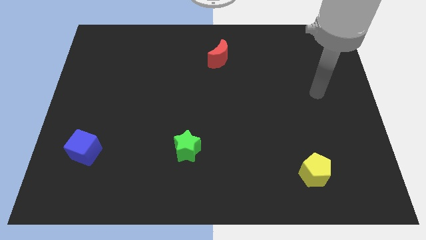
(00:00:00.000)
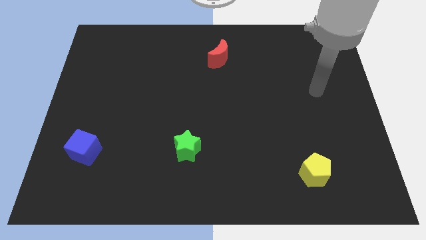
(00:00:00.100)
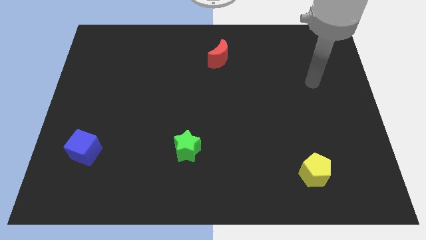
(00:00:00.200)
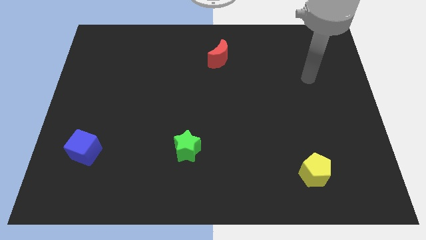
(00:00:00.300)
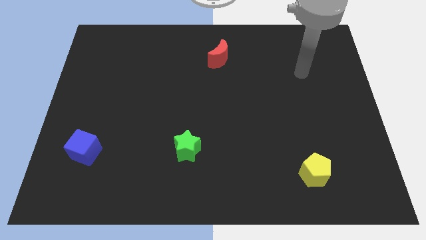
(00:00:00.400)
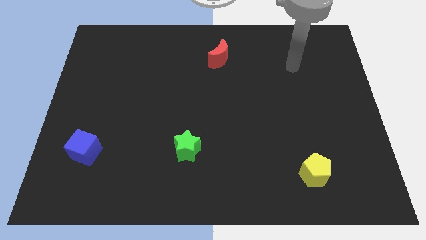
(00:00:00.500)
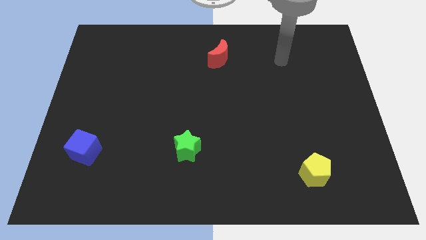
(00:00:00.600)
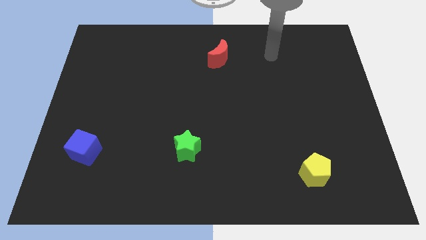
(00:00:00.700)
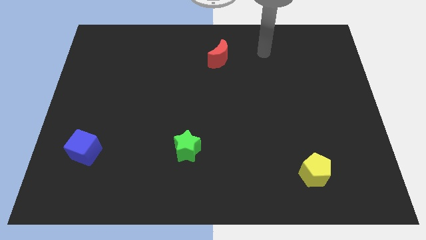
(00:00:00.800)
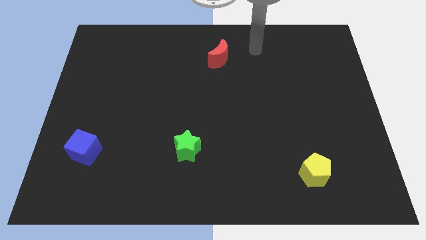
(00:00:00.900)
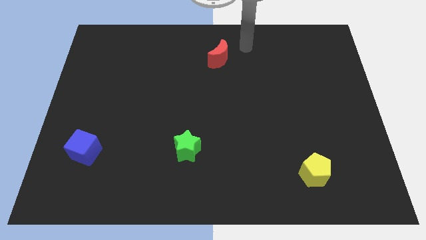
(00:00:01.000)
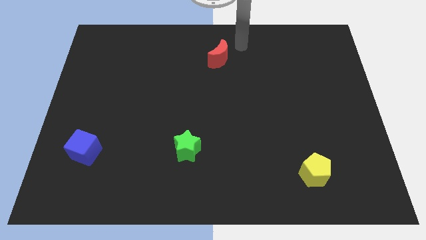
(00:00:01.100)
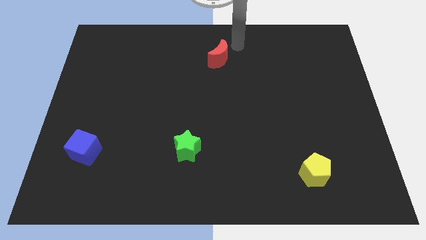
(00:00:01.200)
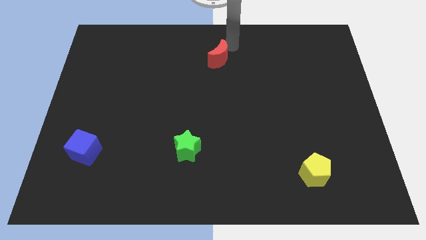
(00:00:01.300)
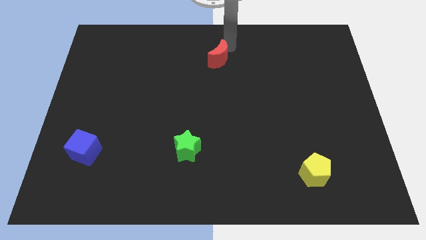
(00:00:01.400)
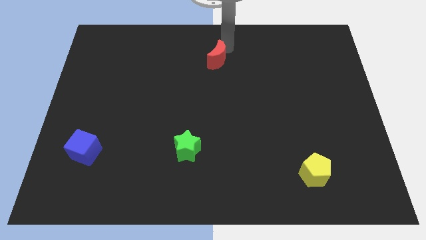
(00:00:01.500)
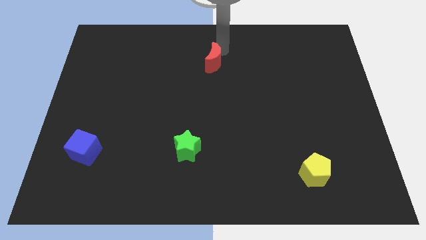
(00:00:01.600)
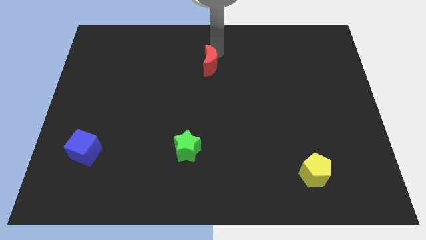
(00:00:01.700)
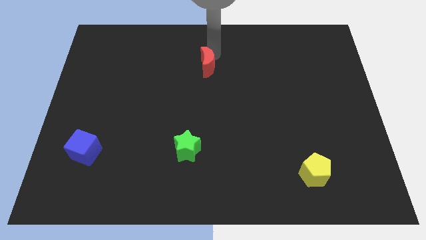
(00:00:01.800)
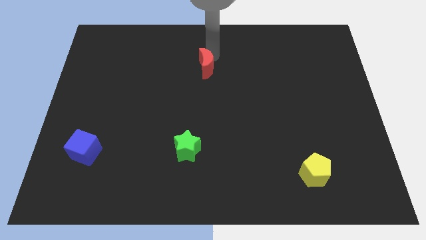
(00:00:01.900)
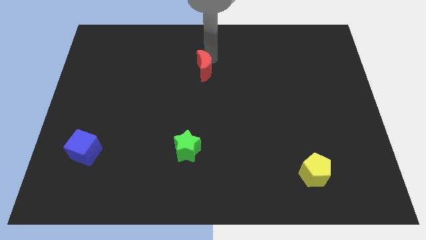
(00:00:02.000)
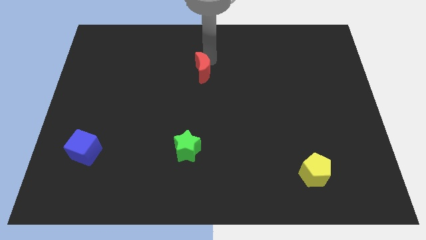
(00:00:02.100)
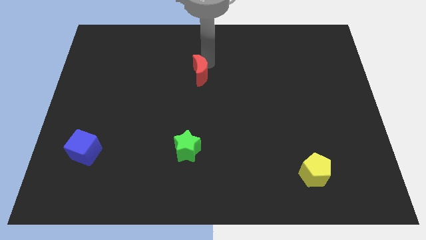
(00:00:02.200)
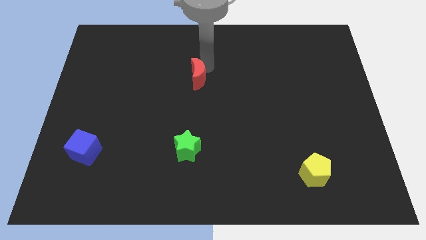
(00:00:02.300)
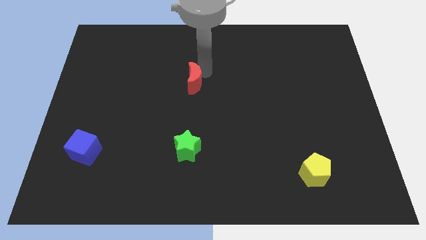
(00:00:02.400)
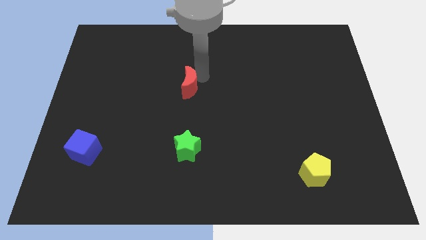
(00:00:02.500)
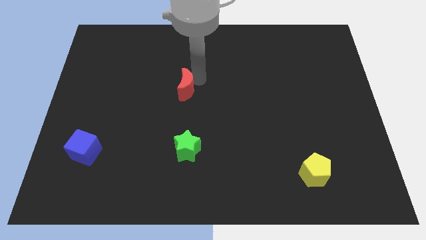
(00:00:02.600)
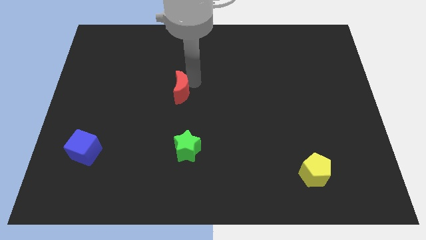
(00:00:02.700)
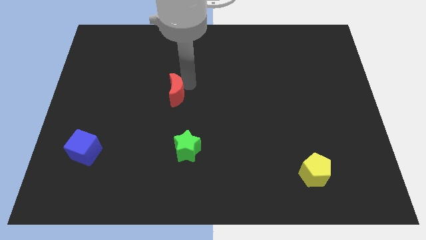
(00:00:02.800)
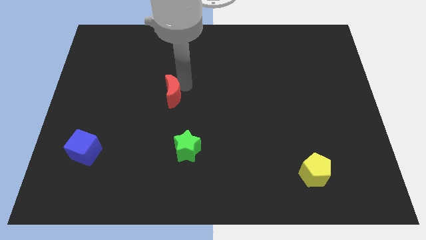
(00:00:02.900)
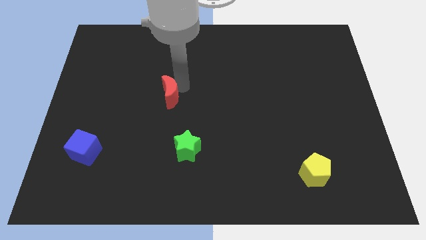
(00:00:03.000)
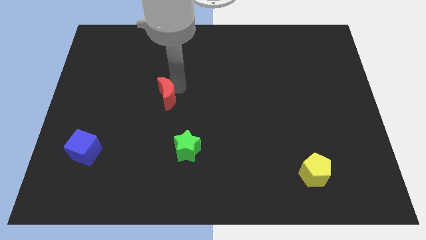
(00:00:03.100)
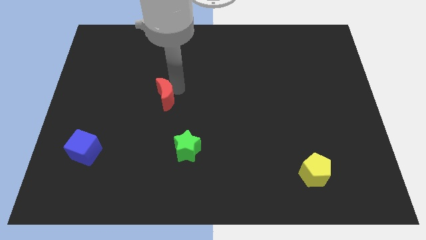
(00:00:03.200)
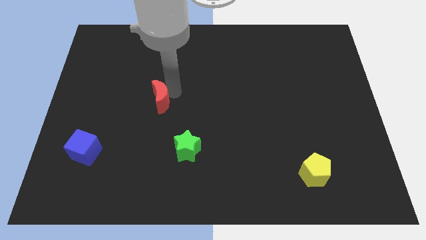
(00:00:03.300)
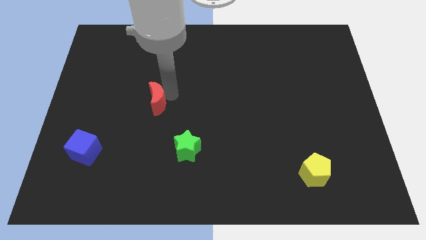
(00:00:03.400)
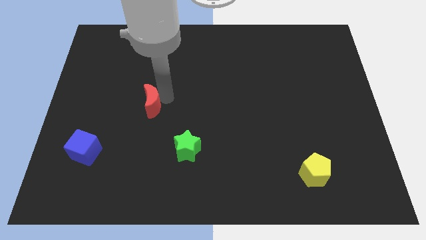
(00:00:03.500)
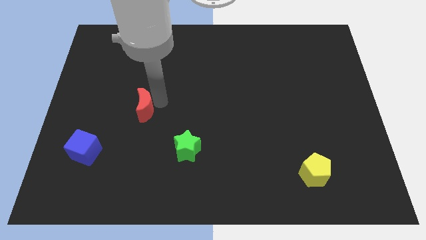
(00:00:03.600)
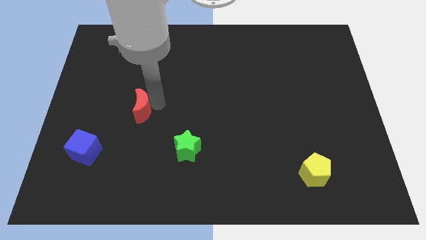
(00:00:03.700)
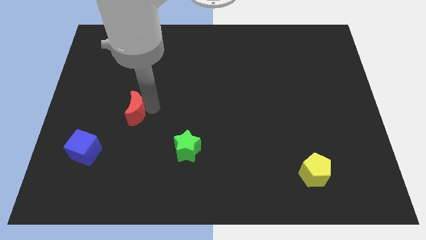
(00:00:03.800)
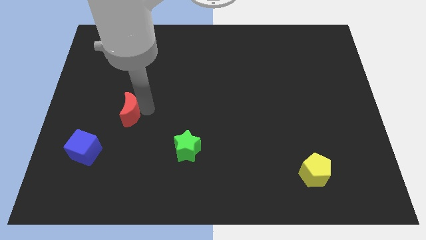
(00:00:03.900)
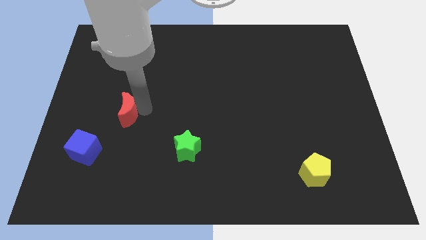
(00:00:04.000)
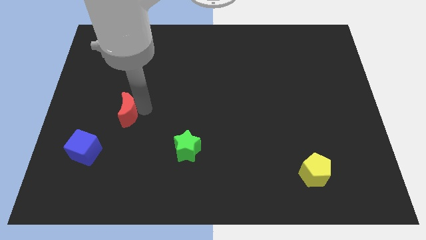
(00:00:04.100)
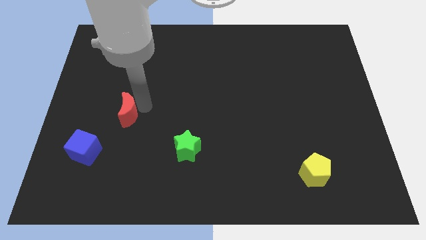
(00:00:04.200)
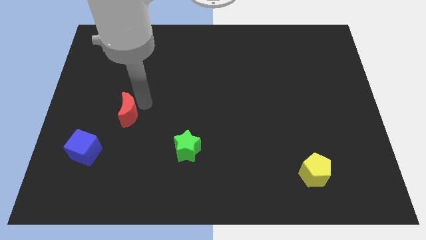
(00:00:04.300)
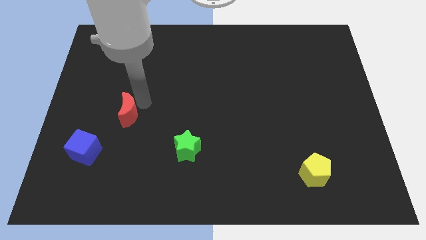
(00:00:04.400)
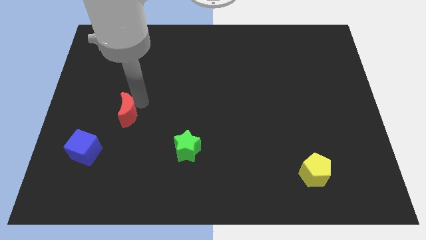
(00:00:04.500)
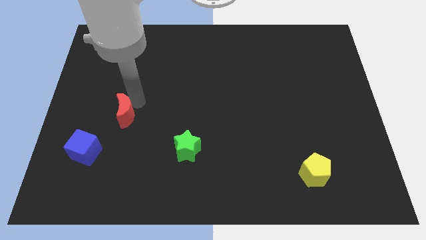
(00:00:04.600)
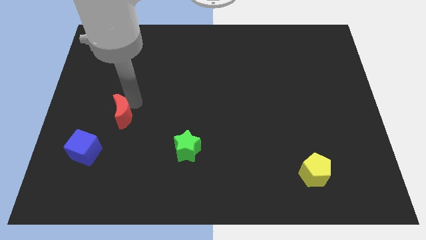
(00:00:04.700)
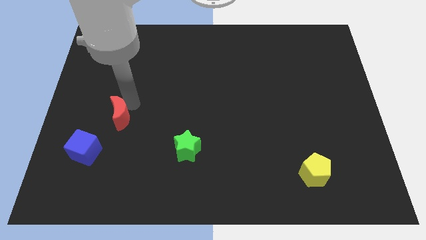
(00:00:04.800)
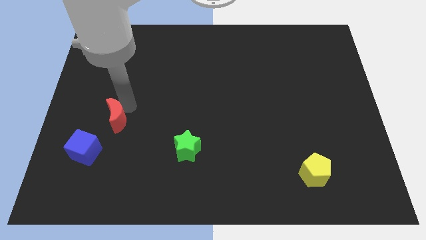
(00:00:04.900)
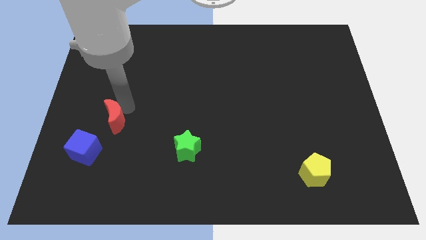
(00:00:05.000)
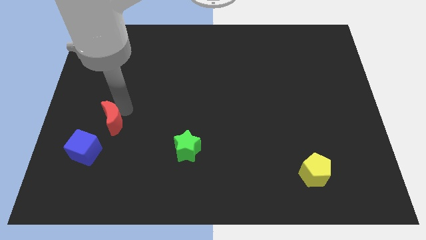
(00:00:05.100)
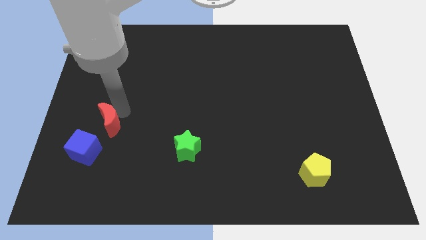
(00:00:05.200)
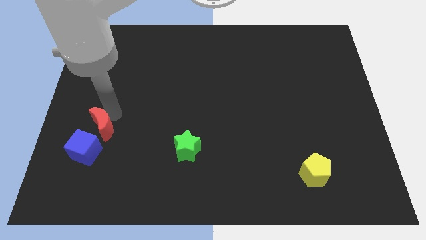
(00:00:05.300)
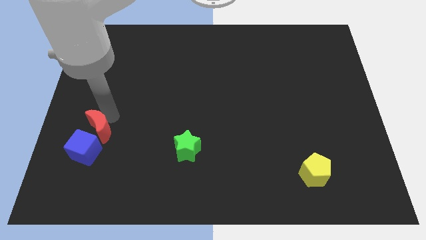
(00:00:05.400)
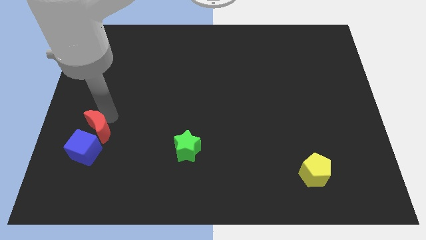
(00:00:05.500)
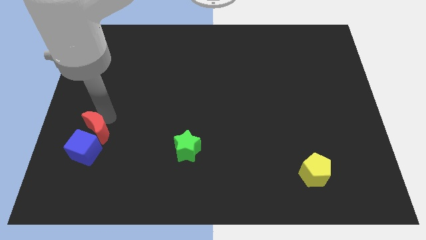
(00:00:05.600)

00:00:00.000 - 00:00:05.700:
move the red moon close to the blue block

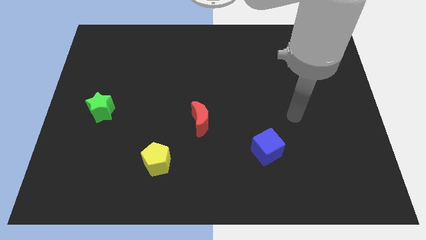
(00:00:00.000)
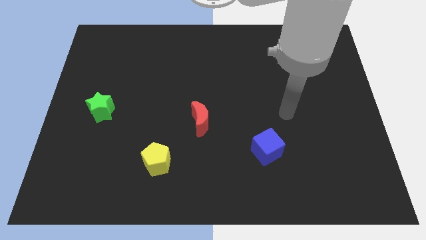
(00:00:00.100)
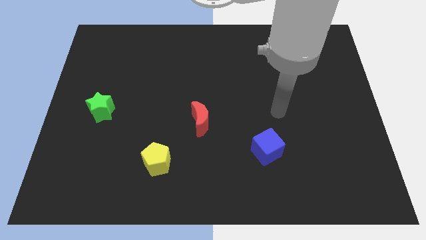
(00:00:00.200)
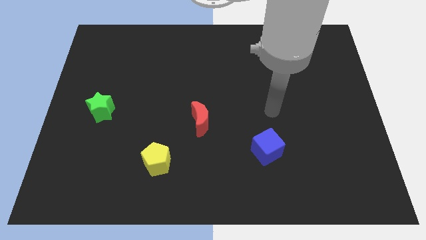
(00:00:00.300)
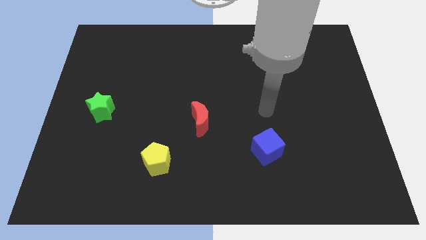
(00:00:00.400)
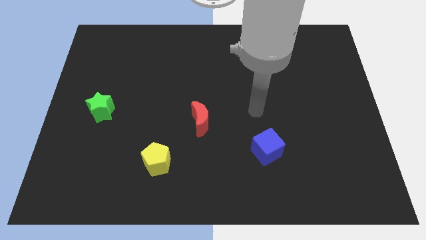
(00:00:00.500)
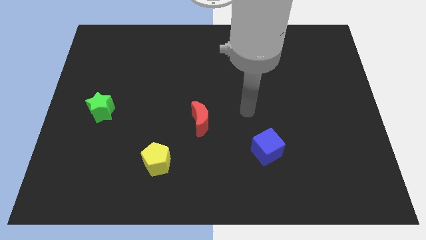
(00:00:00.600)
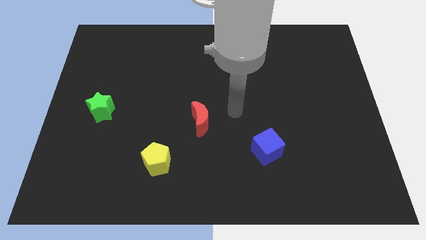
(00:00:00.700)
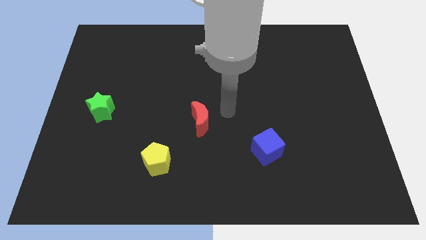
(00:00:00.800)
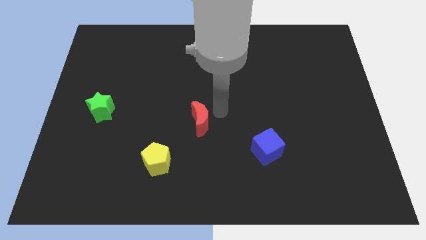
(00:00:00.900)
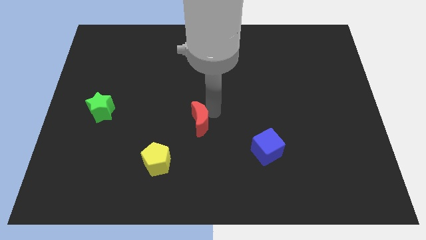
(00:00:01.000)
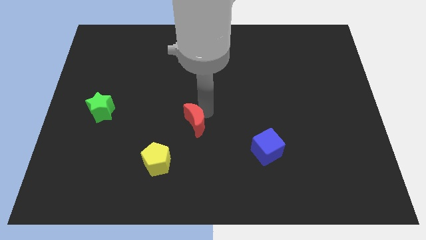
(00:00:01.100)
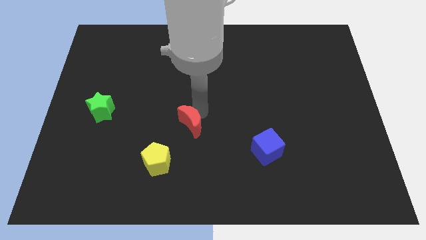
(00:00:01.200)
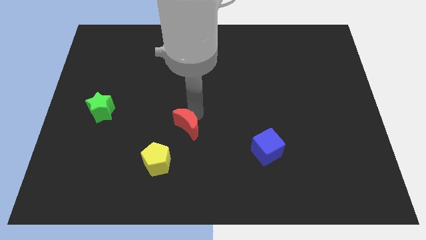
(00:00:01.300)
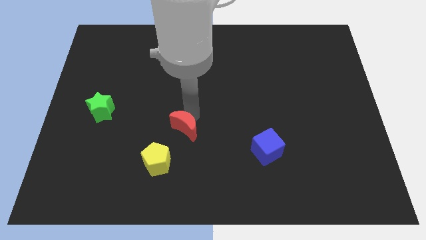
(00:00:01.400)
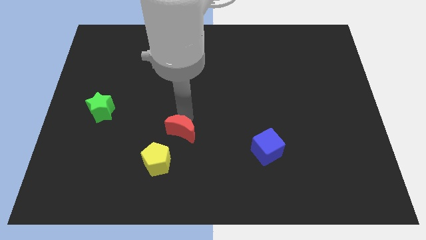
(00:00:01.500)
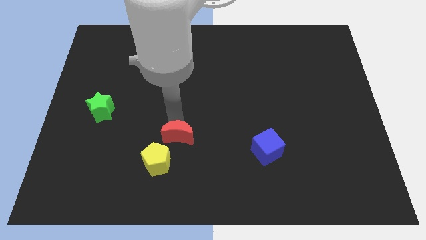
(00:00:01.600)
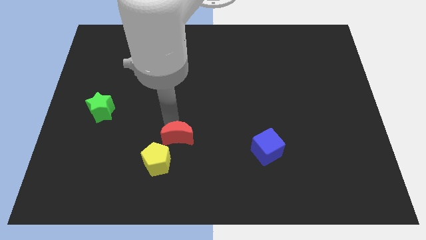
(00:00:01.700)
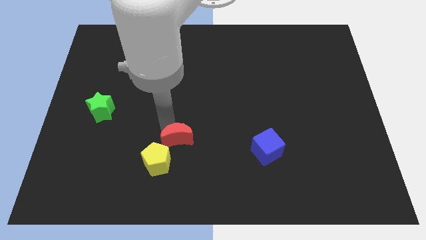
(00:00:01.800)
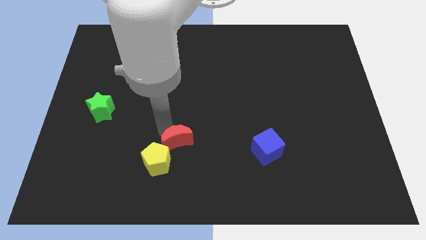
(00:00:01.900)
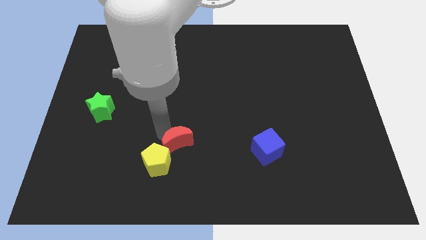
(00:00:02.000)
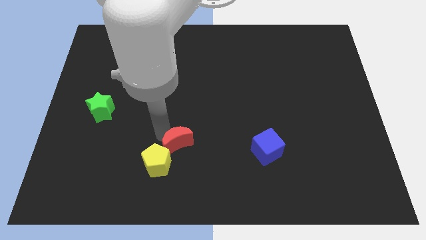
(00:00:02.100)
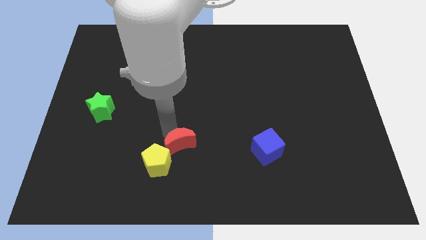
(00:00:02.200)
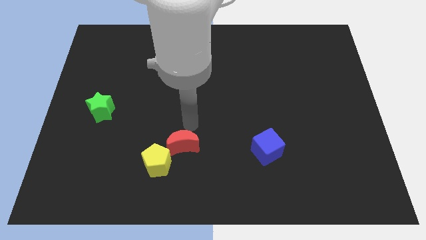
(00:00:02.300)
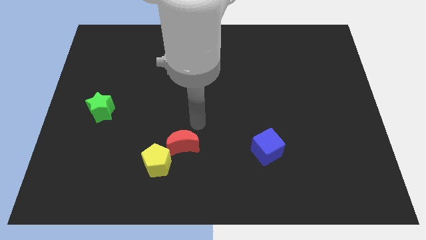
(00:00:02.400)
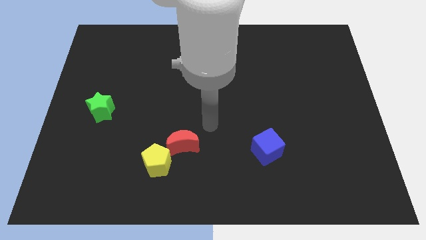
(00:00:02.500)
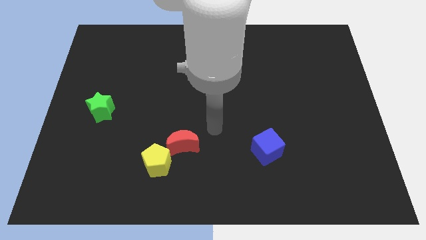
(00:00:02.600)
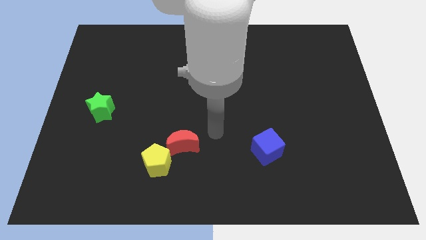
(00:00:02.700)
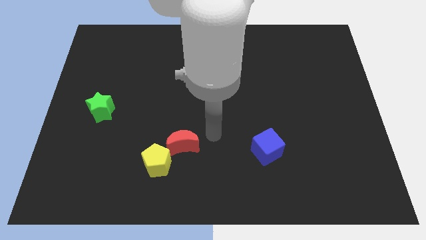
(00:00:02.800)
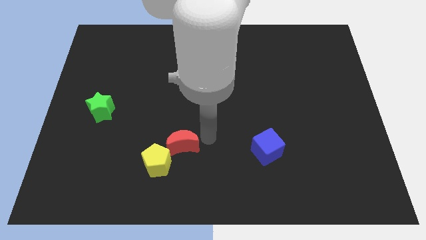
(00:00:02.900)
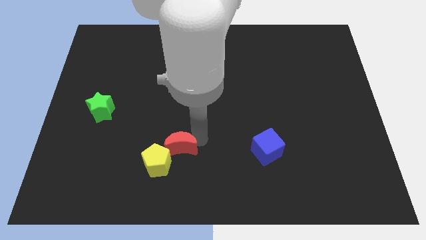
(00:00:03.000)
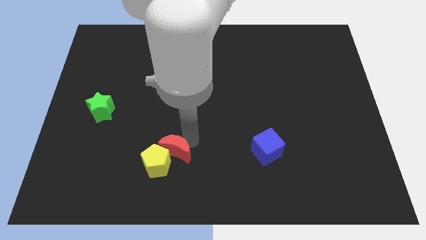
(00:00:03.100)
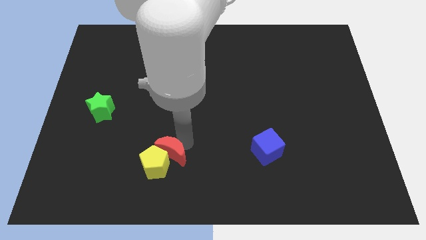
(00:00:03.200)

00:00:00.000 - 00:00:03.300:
move the red moon towards the pentagon
